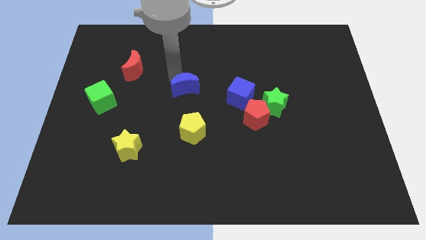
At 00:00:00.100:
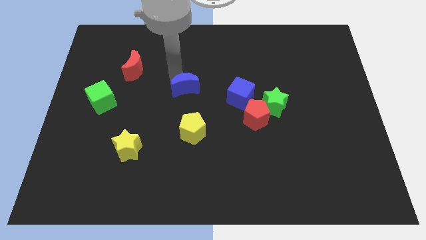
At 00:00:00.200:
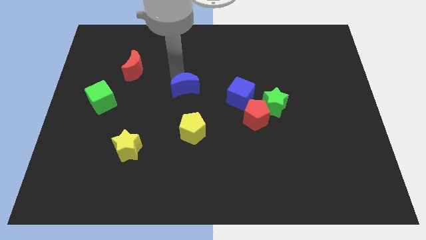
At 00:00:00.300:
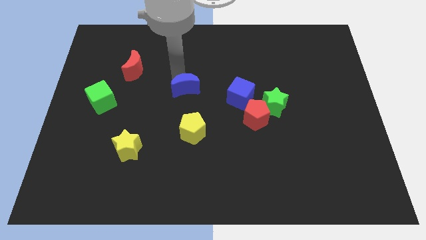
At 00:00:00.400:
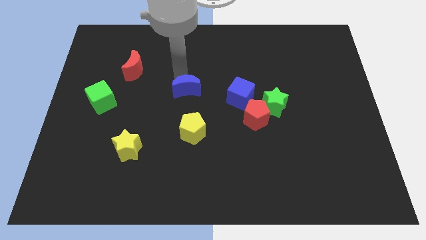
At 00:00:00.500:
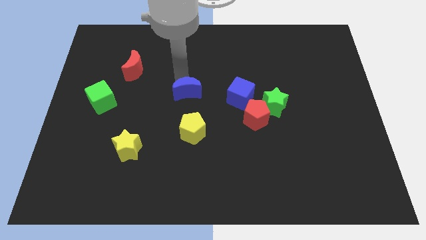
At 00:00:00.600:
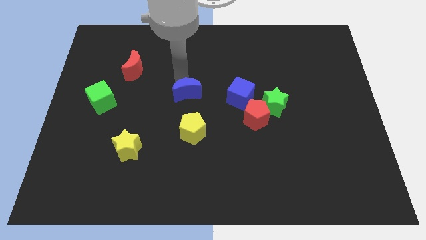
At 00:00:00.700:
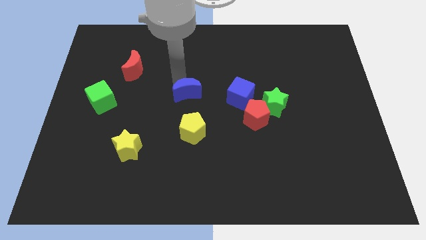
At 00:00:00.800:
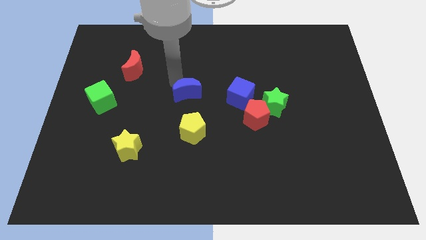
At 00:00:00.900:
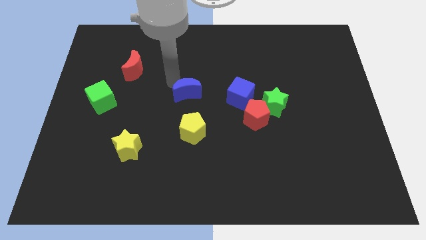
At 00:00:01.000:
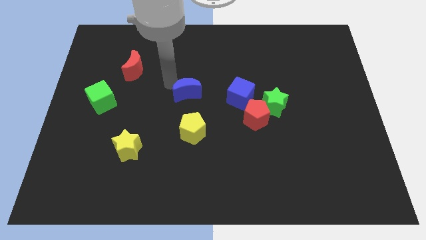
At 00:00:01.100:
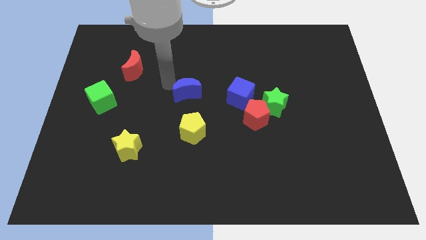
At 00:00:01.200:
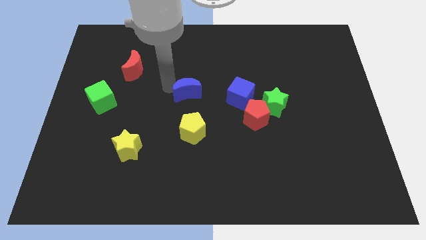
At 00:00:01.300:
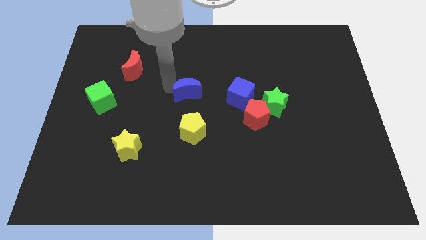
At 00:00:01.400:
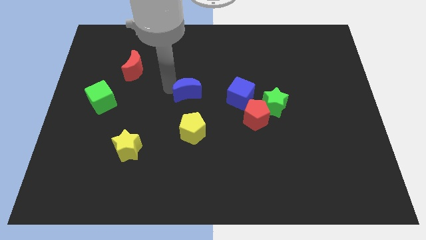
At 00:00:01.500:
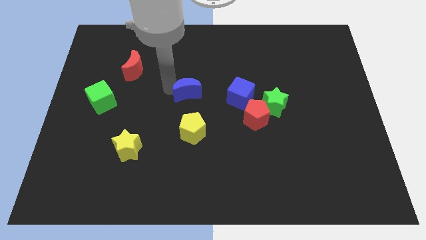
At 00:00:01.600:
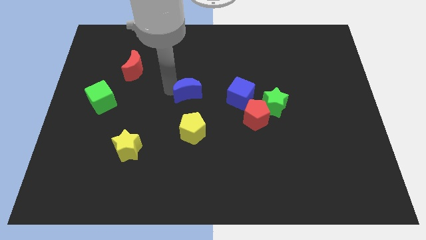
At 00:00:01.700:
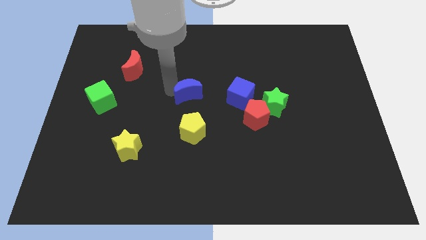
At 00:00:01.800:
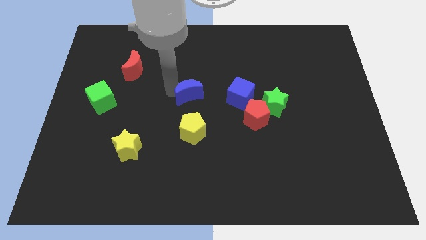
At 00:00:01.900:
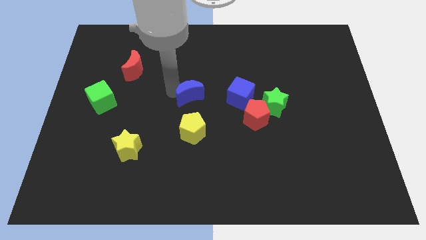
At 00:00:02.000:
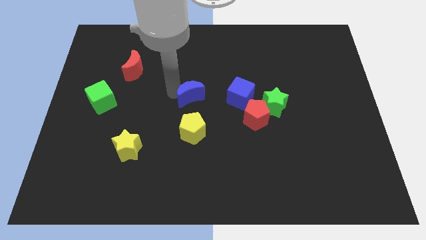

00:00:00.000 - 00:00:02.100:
place blue moon on top of yellow pentagon

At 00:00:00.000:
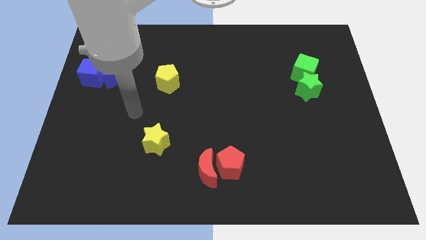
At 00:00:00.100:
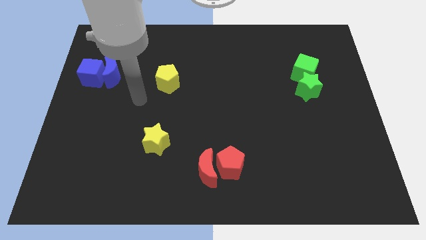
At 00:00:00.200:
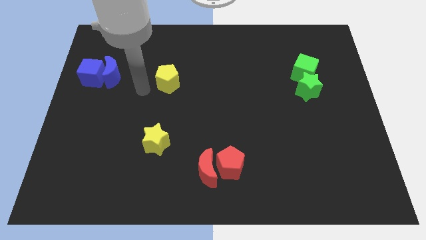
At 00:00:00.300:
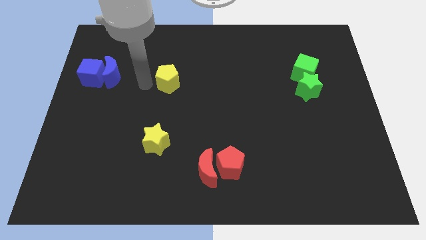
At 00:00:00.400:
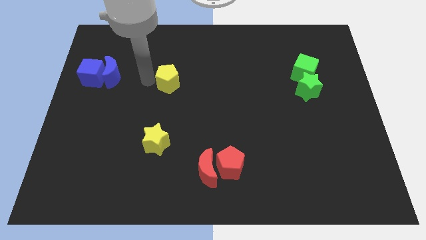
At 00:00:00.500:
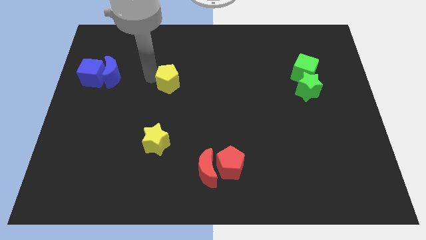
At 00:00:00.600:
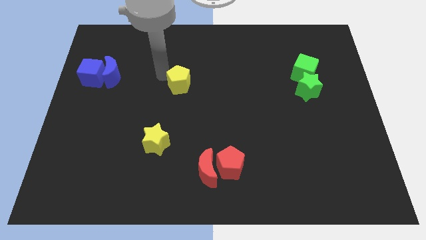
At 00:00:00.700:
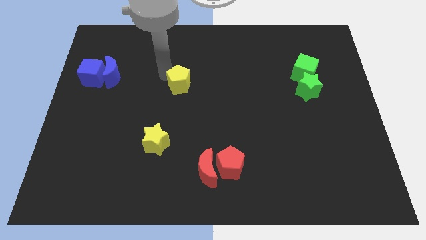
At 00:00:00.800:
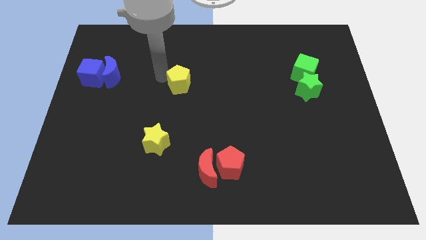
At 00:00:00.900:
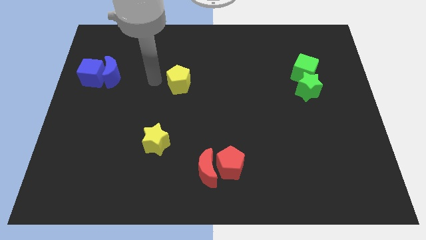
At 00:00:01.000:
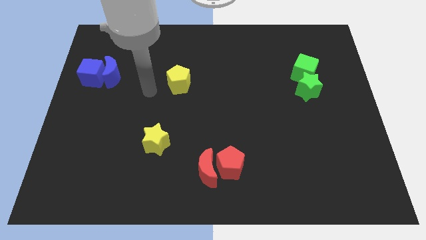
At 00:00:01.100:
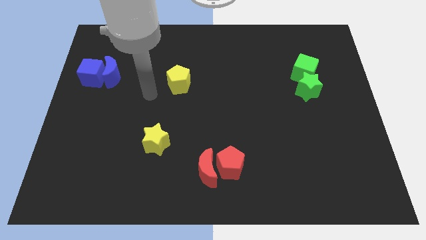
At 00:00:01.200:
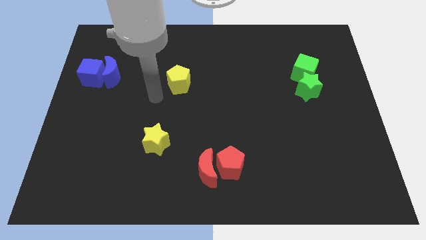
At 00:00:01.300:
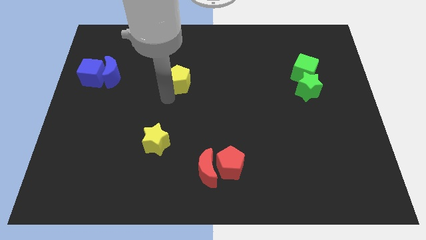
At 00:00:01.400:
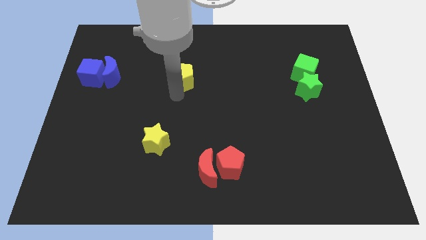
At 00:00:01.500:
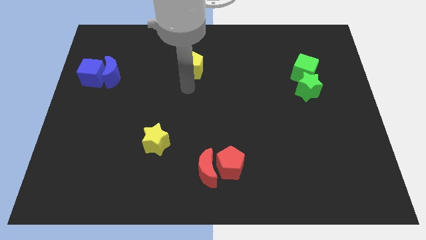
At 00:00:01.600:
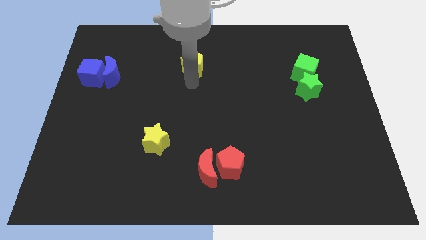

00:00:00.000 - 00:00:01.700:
push the yellow pentagon to the top left center

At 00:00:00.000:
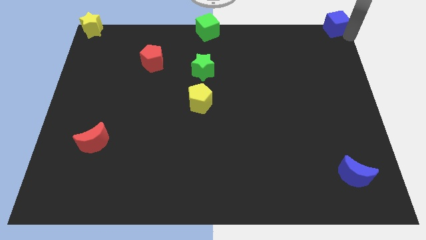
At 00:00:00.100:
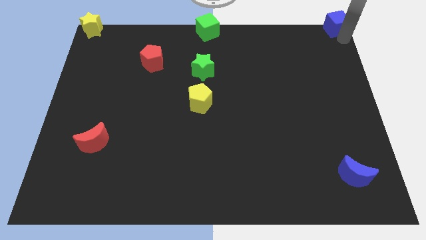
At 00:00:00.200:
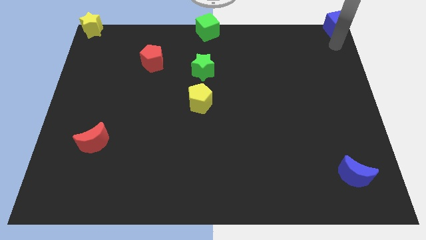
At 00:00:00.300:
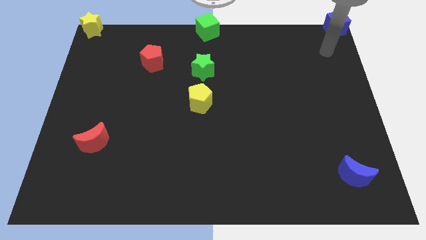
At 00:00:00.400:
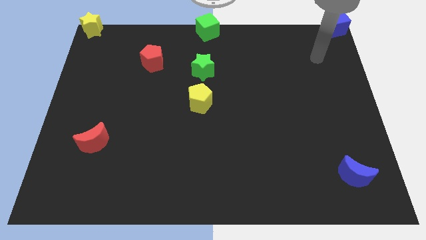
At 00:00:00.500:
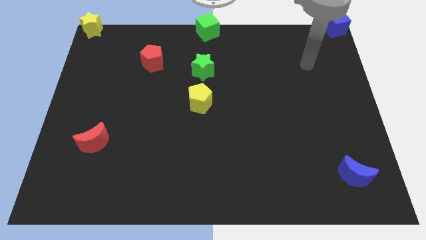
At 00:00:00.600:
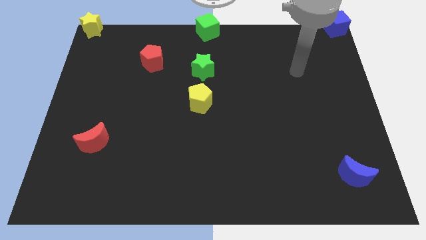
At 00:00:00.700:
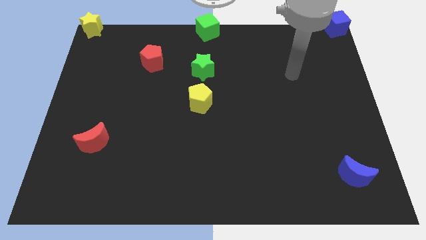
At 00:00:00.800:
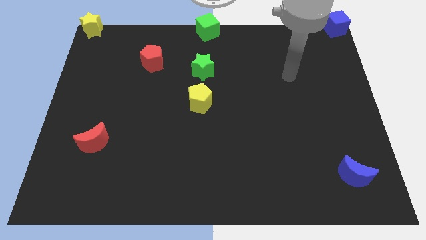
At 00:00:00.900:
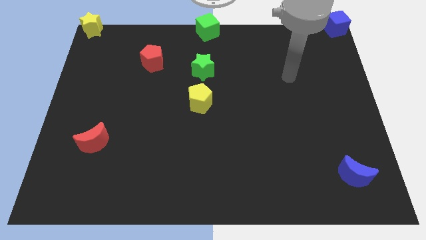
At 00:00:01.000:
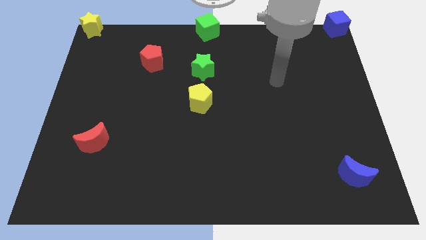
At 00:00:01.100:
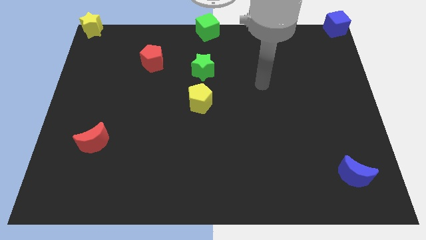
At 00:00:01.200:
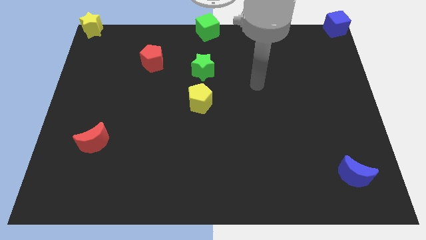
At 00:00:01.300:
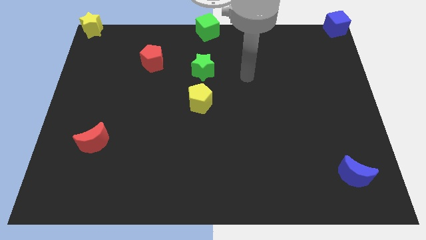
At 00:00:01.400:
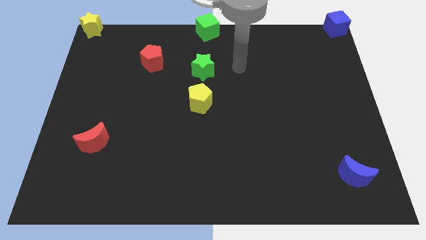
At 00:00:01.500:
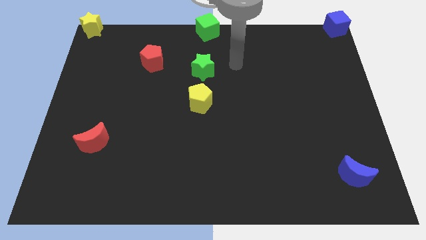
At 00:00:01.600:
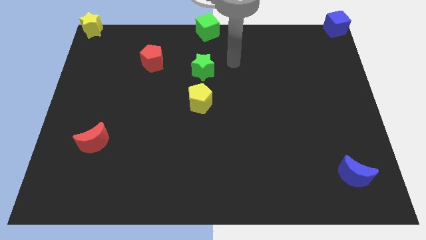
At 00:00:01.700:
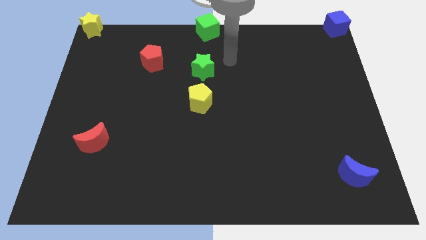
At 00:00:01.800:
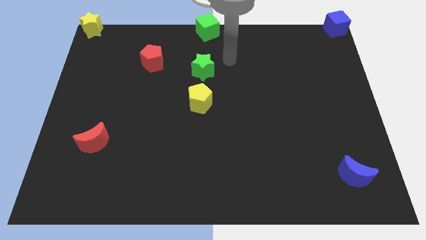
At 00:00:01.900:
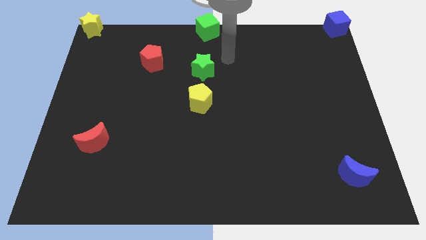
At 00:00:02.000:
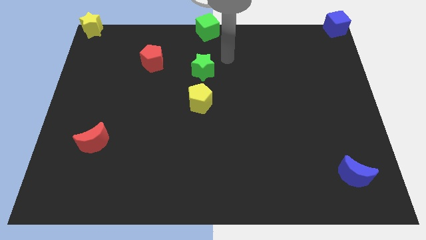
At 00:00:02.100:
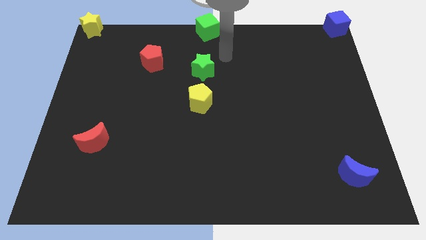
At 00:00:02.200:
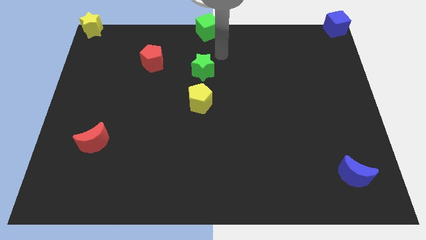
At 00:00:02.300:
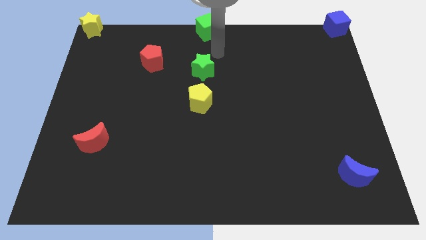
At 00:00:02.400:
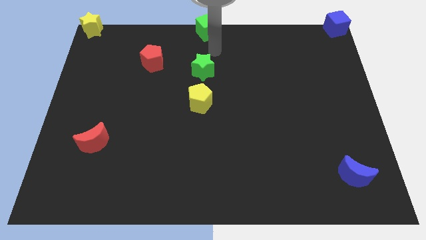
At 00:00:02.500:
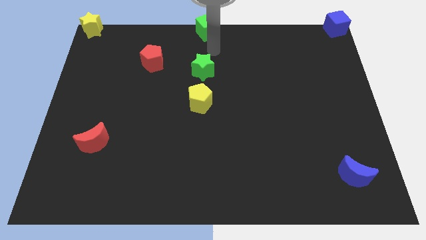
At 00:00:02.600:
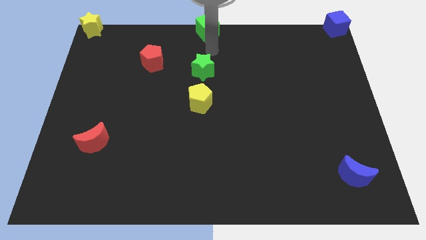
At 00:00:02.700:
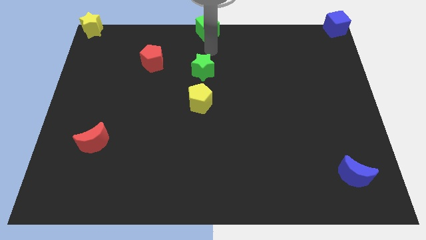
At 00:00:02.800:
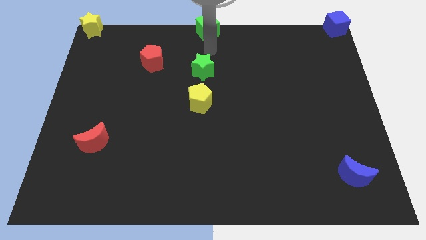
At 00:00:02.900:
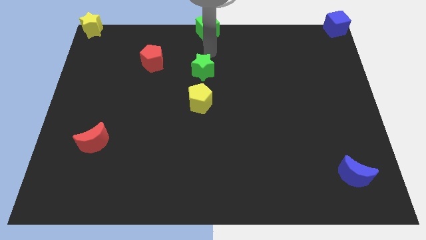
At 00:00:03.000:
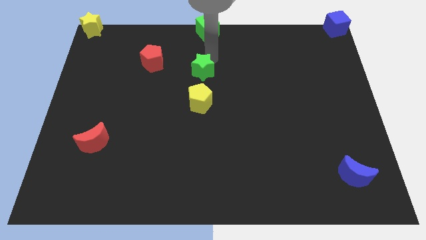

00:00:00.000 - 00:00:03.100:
move your arm away from the blue cube

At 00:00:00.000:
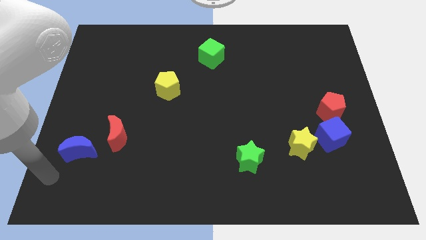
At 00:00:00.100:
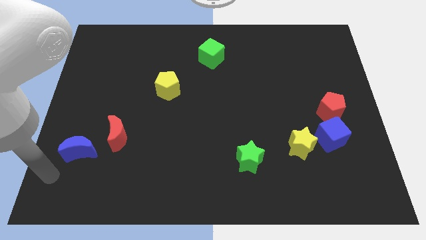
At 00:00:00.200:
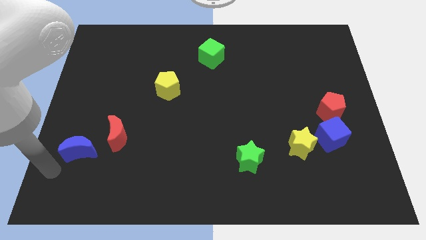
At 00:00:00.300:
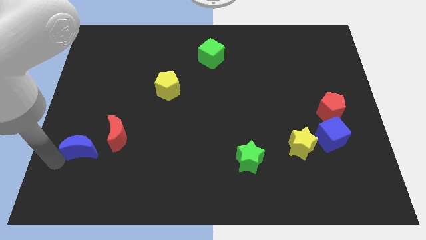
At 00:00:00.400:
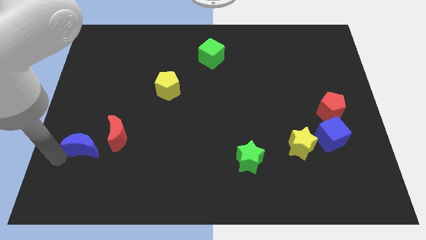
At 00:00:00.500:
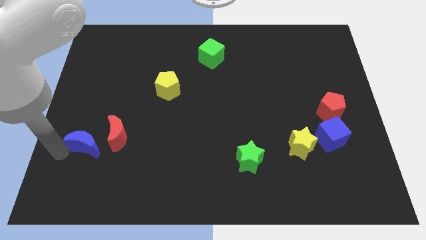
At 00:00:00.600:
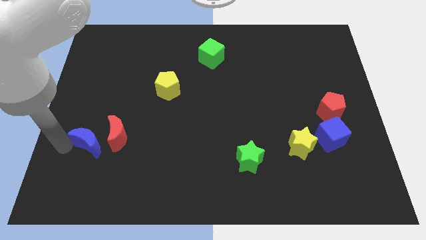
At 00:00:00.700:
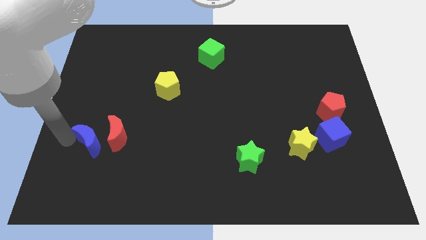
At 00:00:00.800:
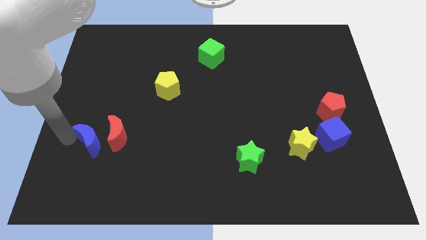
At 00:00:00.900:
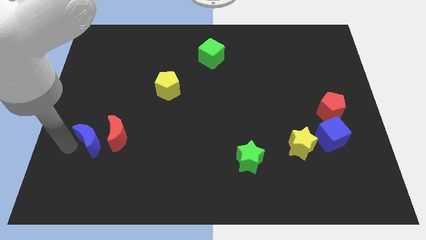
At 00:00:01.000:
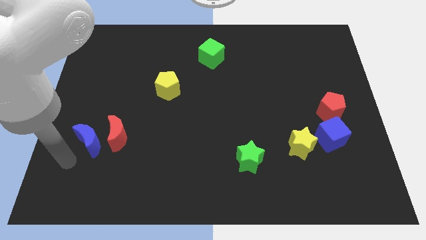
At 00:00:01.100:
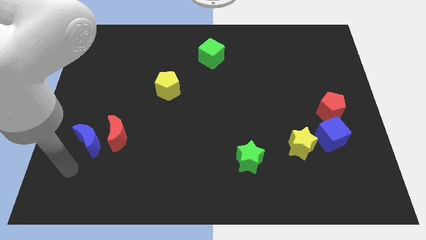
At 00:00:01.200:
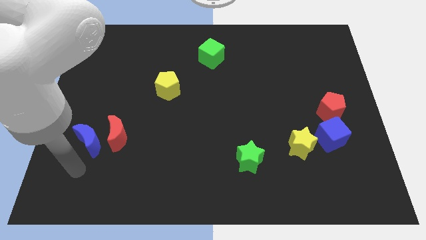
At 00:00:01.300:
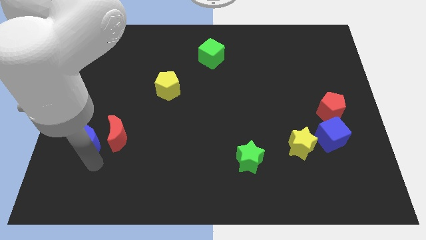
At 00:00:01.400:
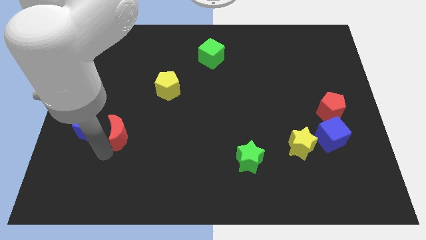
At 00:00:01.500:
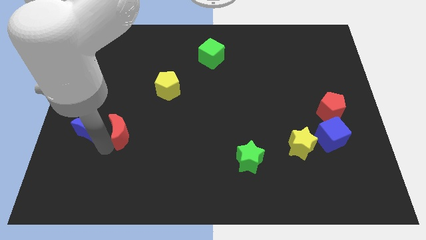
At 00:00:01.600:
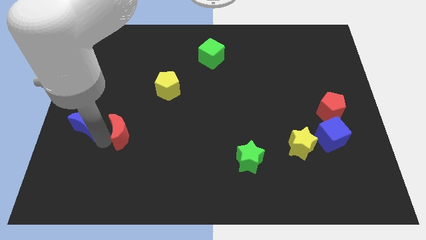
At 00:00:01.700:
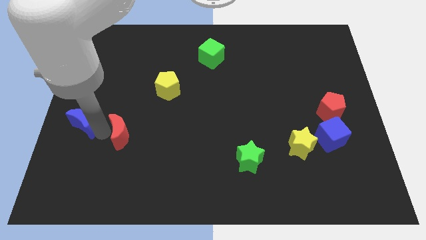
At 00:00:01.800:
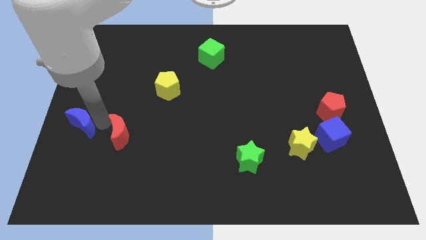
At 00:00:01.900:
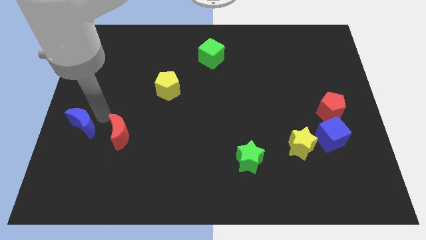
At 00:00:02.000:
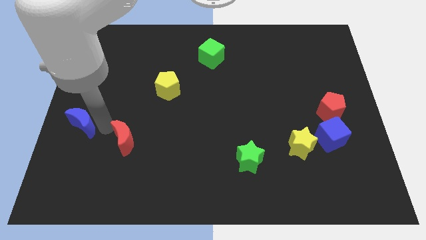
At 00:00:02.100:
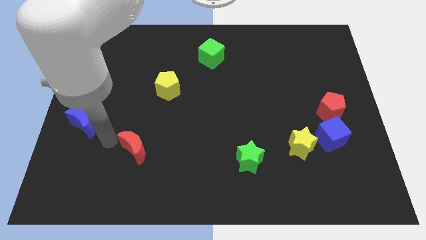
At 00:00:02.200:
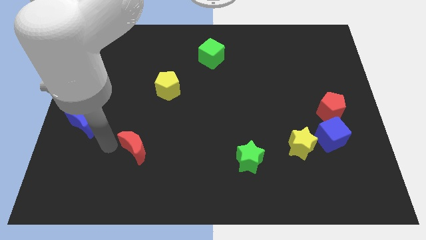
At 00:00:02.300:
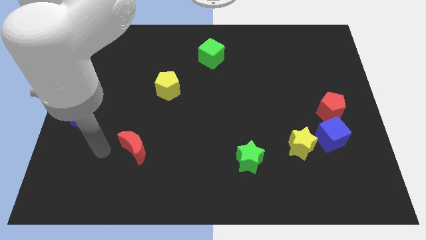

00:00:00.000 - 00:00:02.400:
place the blue crescent besides red crescent
